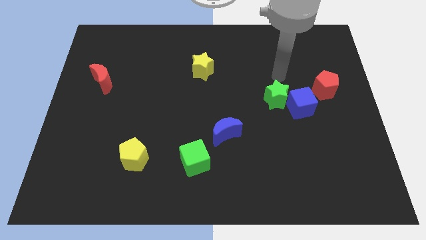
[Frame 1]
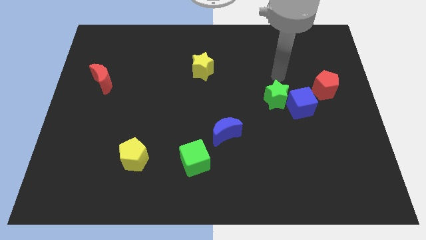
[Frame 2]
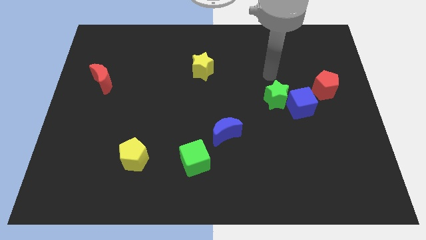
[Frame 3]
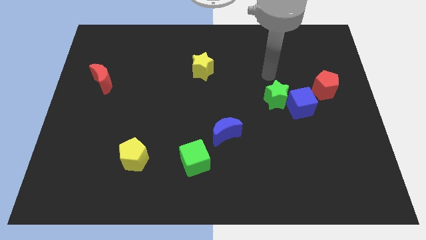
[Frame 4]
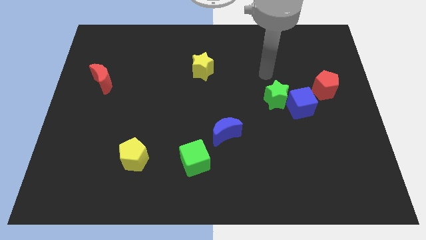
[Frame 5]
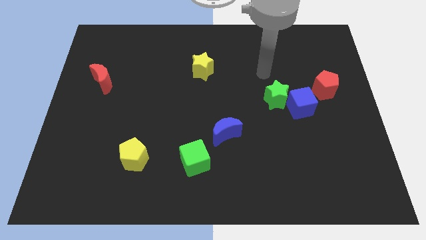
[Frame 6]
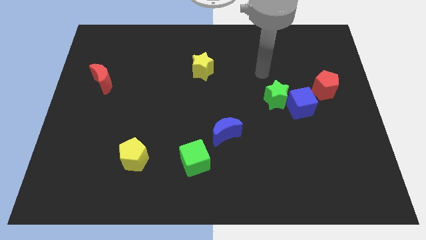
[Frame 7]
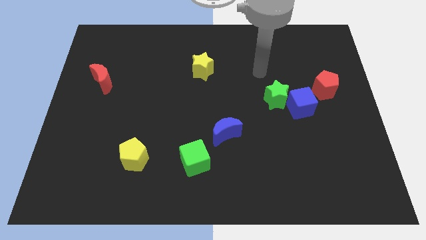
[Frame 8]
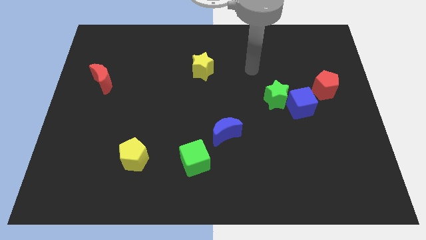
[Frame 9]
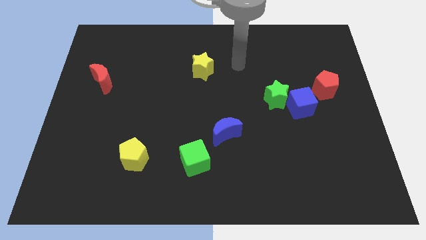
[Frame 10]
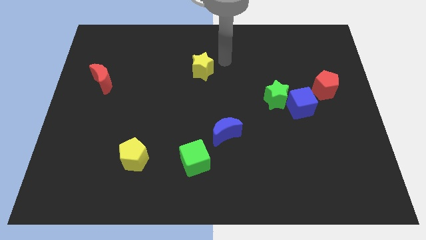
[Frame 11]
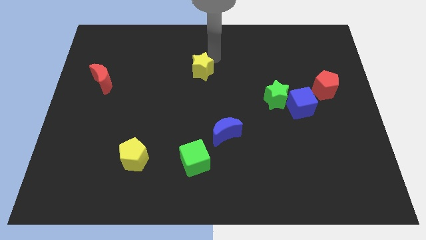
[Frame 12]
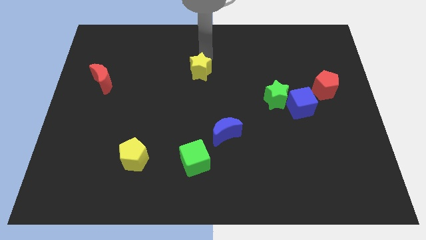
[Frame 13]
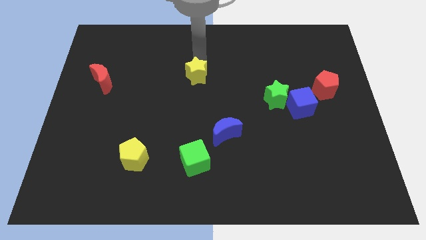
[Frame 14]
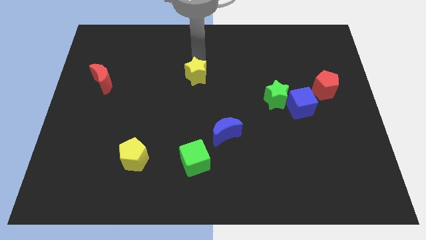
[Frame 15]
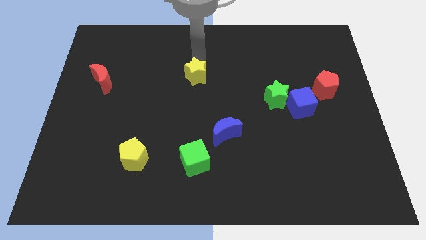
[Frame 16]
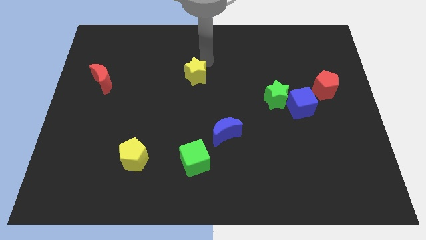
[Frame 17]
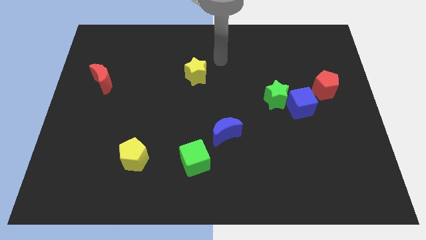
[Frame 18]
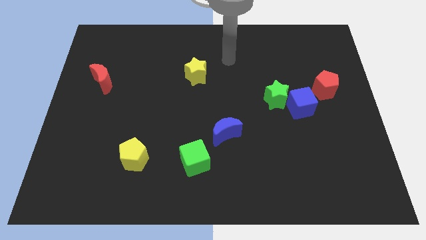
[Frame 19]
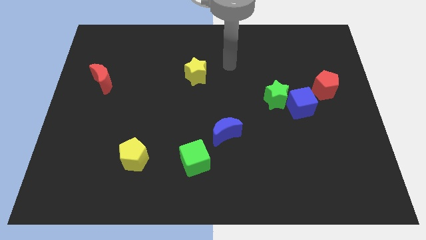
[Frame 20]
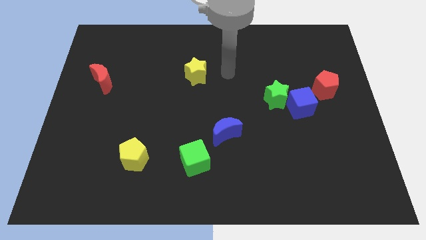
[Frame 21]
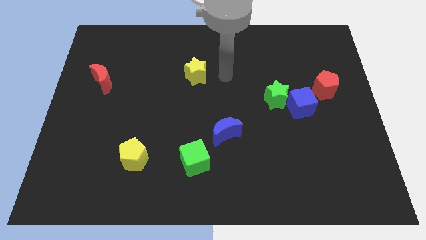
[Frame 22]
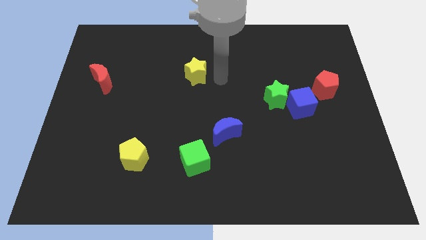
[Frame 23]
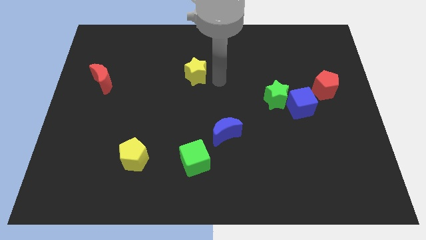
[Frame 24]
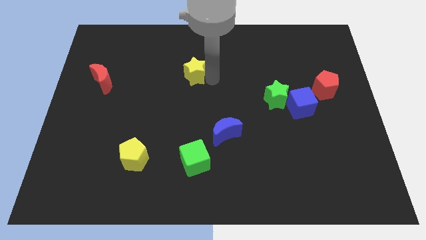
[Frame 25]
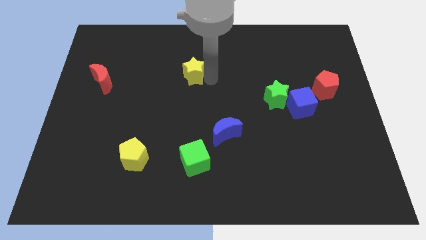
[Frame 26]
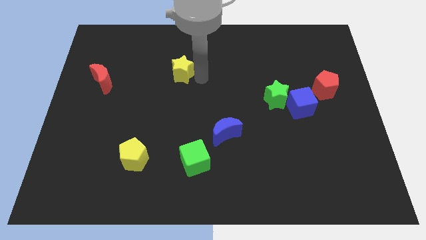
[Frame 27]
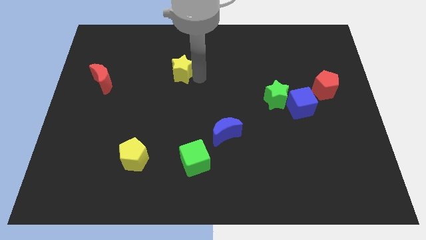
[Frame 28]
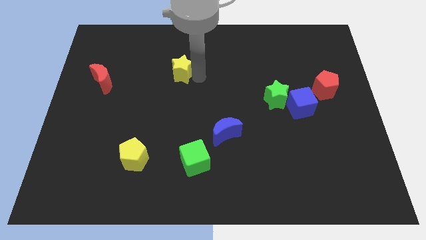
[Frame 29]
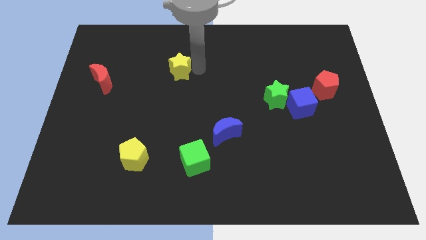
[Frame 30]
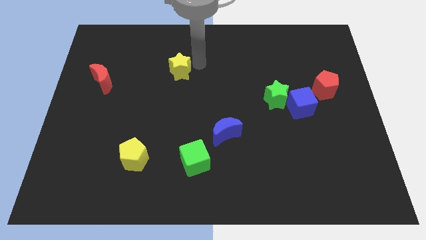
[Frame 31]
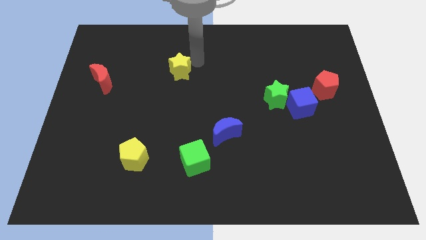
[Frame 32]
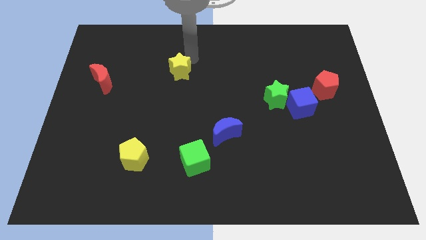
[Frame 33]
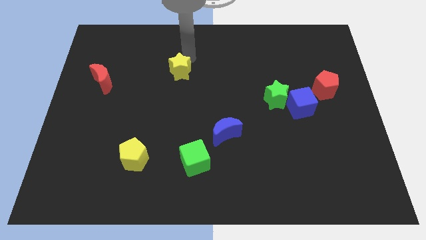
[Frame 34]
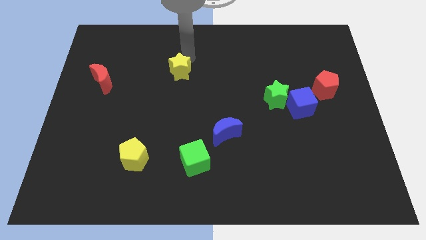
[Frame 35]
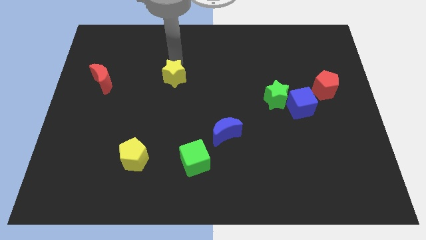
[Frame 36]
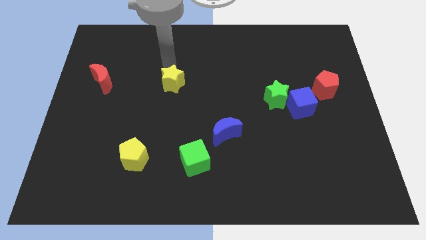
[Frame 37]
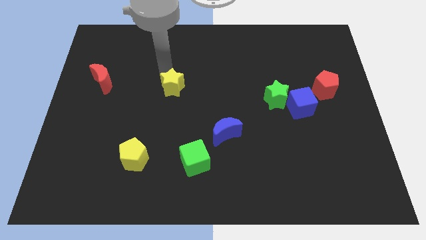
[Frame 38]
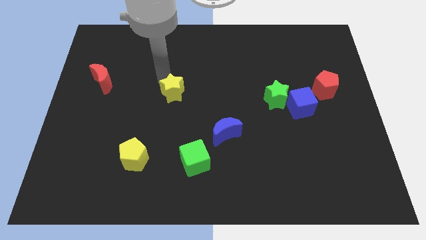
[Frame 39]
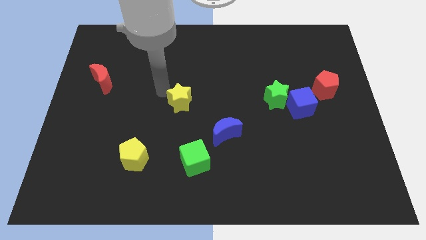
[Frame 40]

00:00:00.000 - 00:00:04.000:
place the yellow star parallel left to the green star

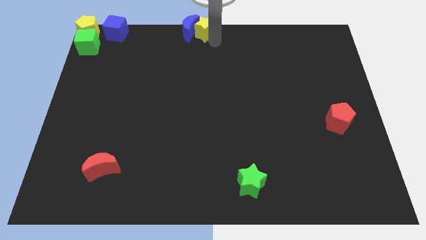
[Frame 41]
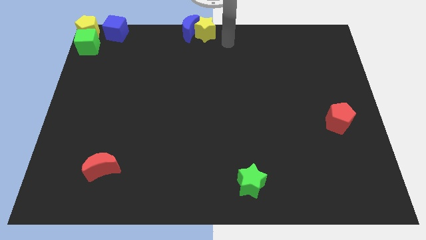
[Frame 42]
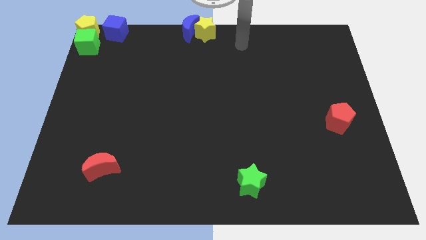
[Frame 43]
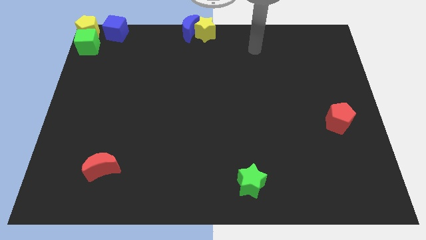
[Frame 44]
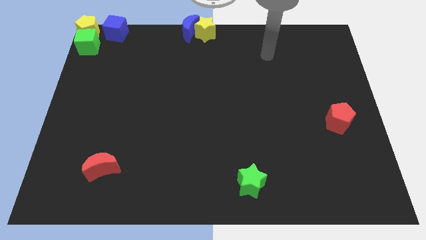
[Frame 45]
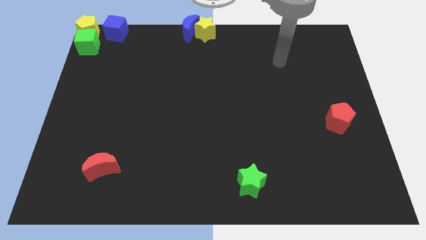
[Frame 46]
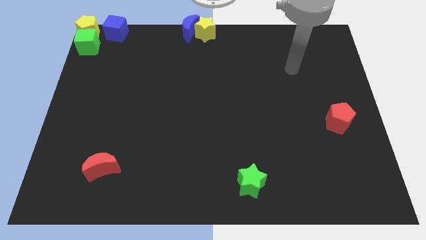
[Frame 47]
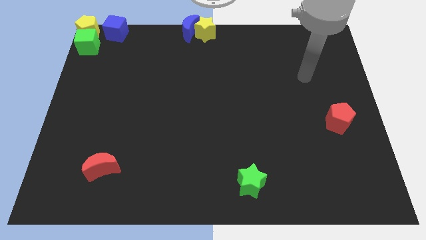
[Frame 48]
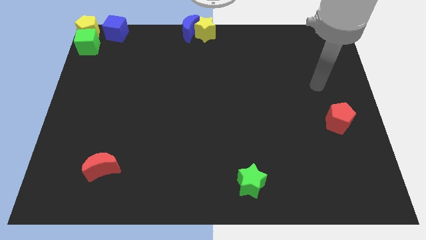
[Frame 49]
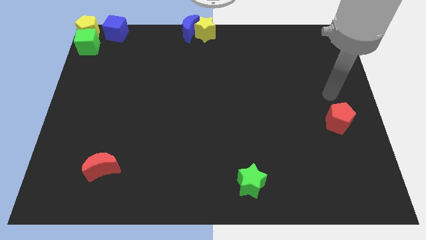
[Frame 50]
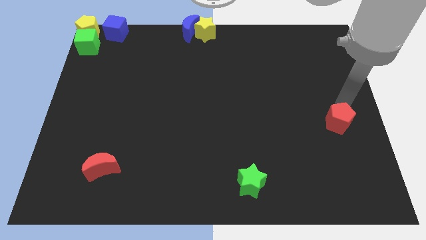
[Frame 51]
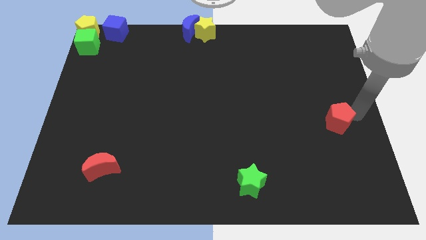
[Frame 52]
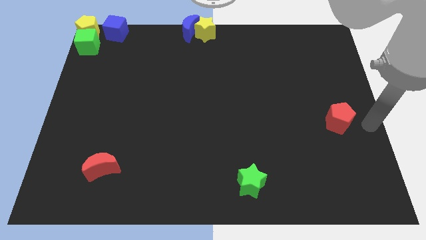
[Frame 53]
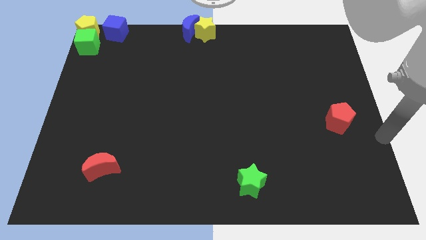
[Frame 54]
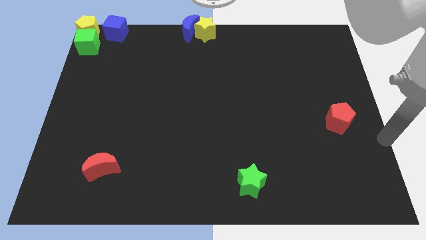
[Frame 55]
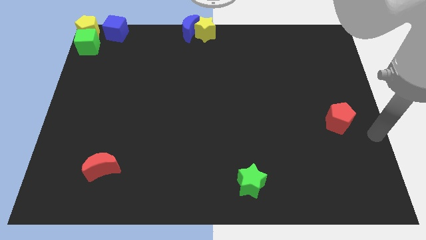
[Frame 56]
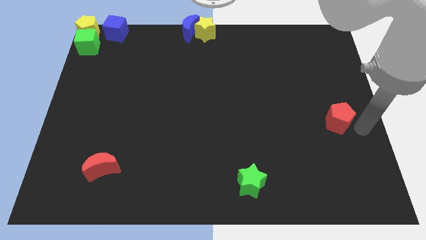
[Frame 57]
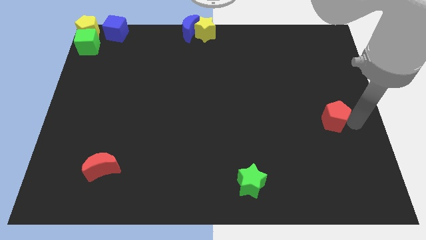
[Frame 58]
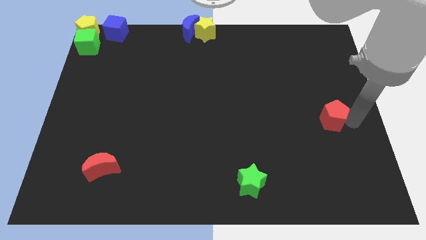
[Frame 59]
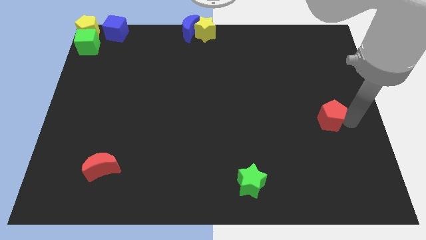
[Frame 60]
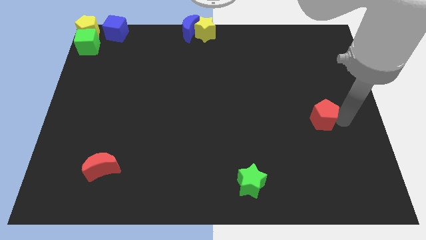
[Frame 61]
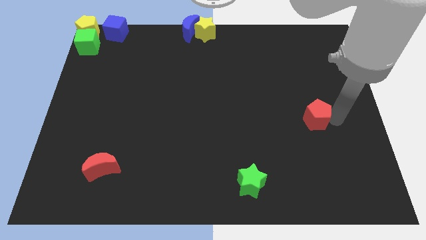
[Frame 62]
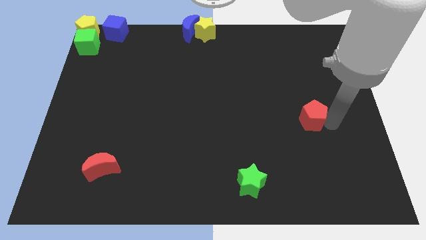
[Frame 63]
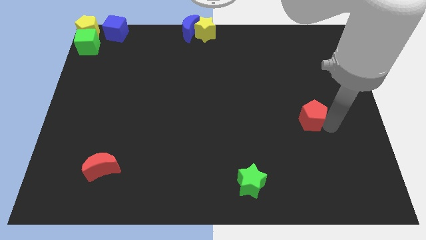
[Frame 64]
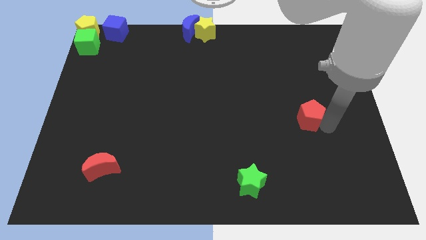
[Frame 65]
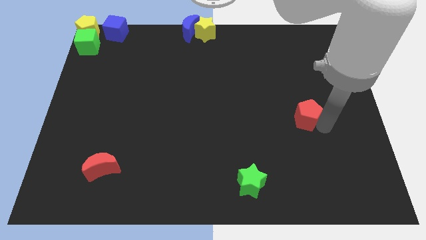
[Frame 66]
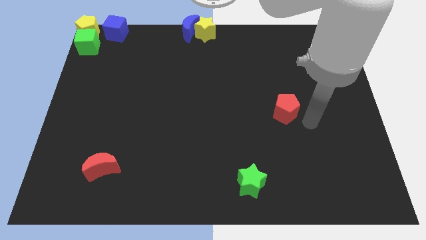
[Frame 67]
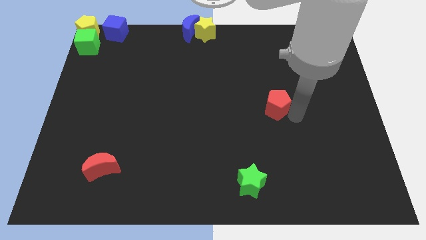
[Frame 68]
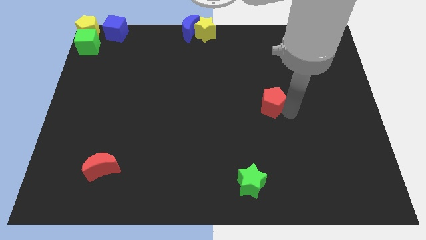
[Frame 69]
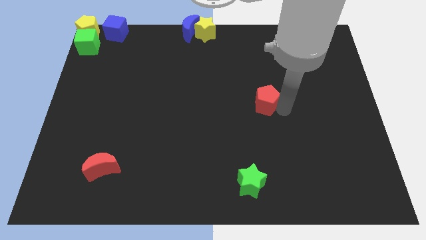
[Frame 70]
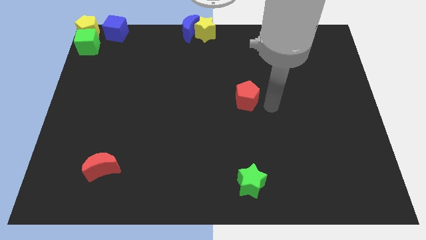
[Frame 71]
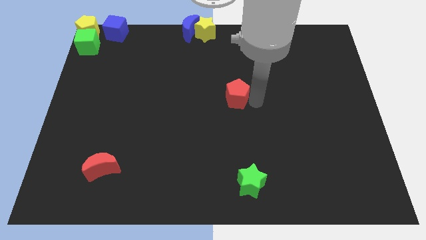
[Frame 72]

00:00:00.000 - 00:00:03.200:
place the red pentagon vertically above the green star

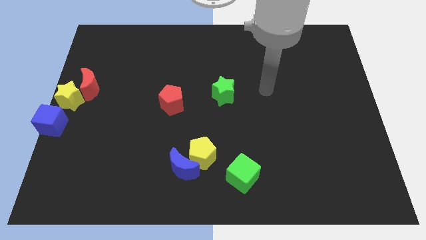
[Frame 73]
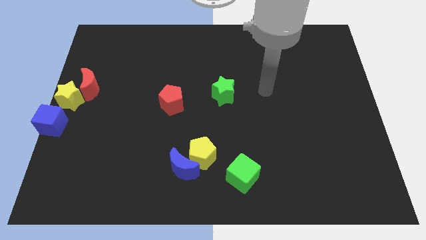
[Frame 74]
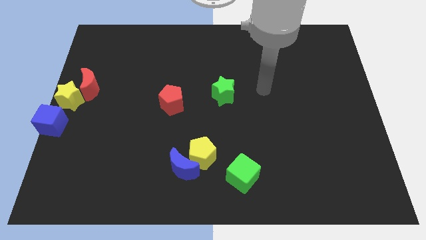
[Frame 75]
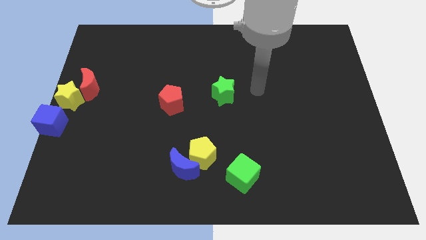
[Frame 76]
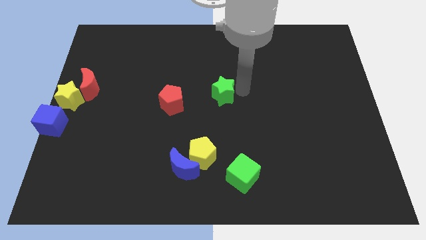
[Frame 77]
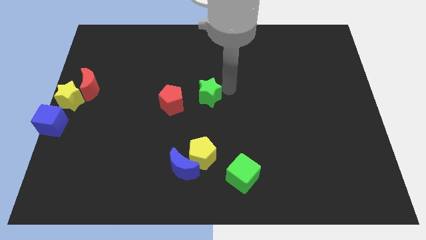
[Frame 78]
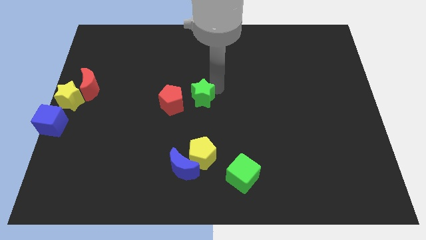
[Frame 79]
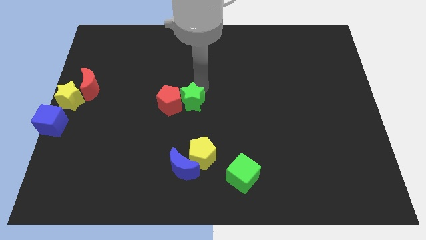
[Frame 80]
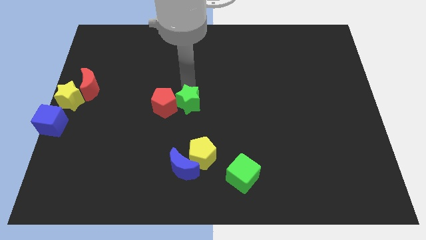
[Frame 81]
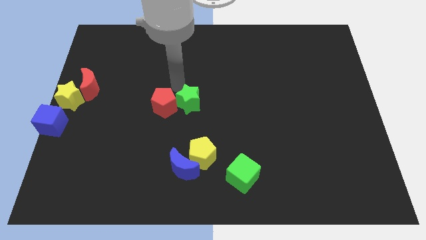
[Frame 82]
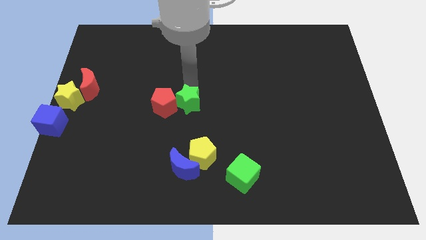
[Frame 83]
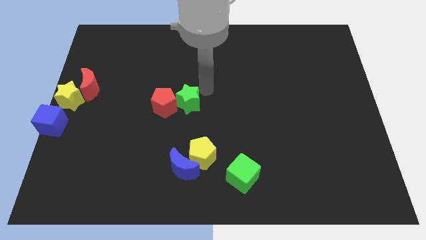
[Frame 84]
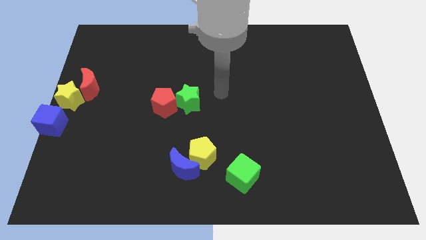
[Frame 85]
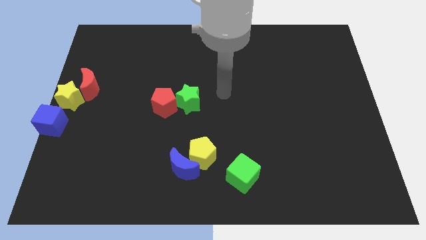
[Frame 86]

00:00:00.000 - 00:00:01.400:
move the green star into the right side of the red pentagon

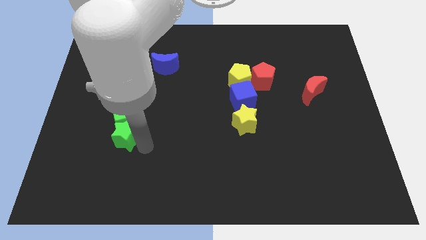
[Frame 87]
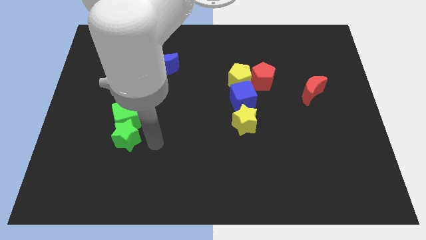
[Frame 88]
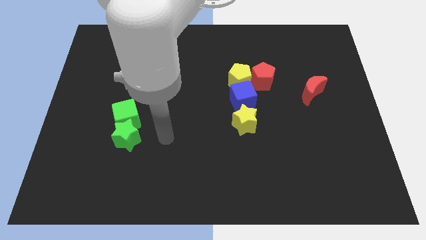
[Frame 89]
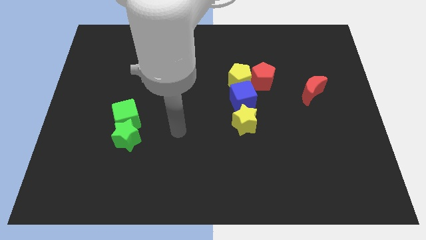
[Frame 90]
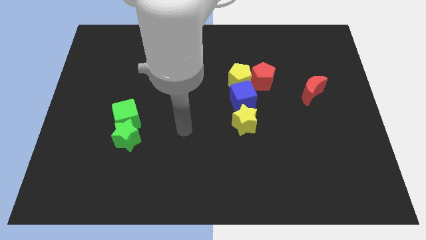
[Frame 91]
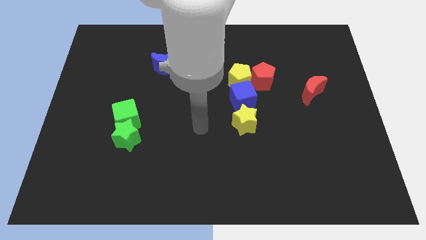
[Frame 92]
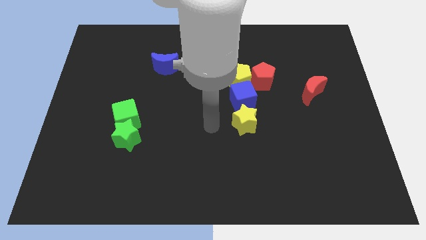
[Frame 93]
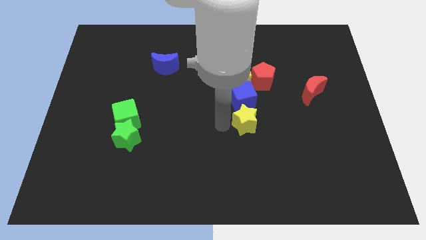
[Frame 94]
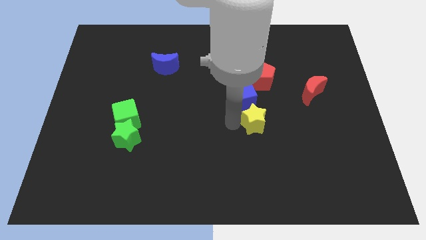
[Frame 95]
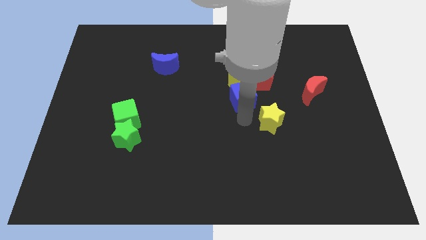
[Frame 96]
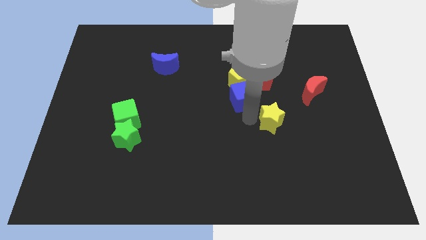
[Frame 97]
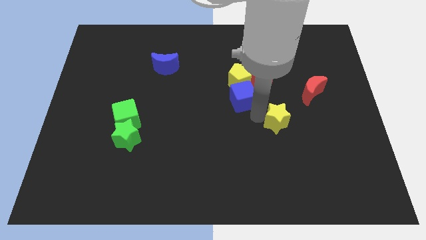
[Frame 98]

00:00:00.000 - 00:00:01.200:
slightly move the yellow star to the right side
